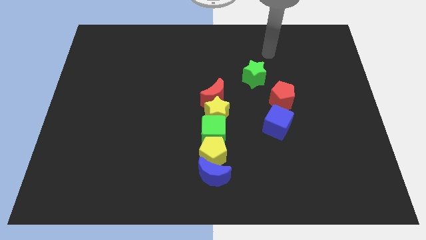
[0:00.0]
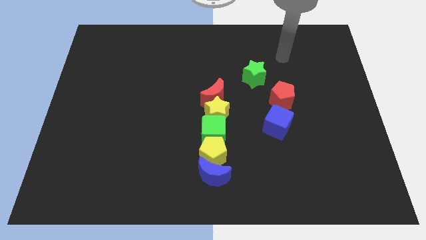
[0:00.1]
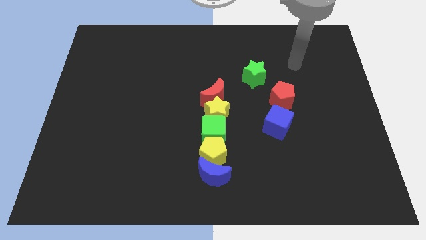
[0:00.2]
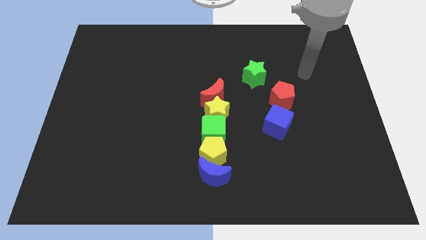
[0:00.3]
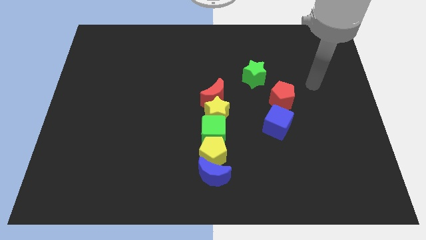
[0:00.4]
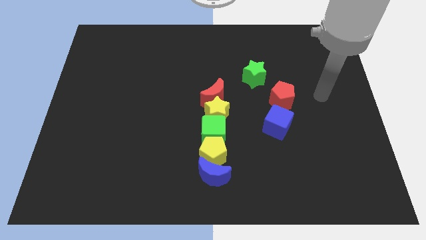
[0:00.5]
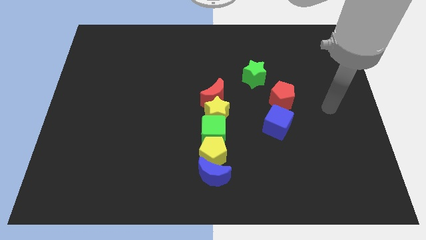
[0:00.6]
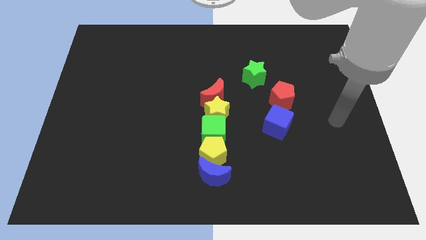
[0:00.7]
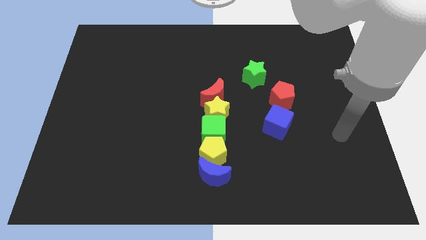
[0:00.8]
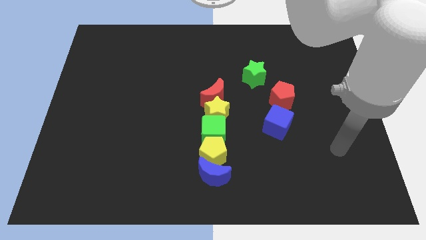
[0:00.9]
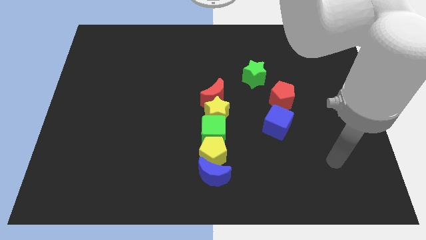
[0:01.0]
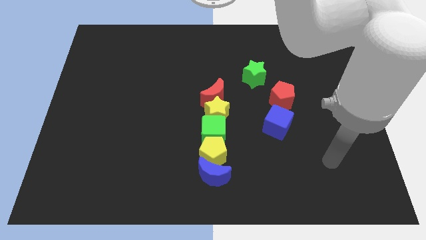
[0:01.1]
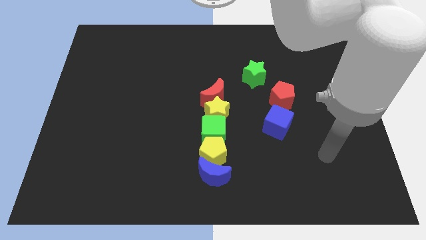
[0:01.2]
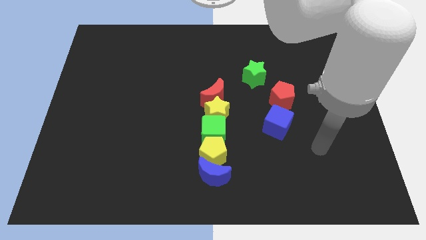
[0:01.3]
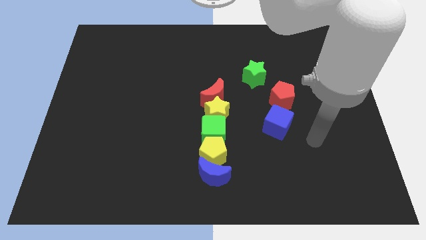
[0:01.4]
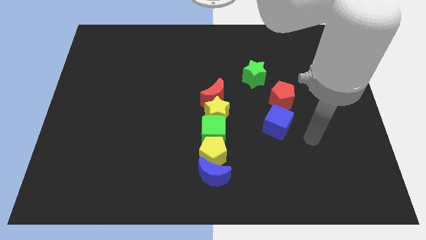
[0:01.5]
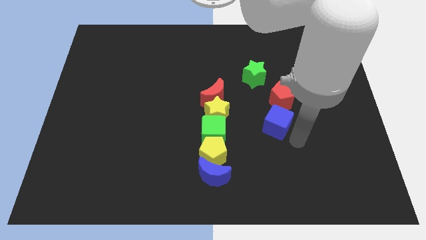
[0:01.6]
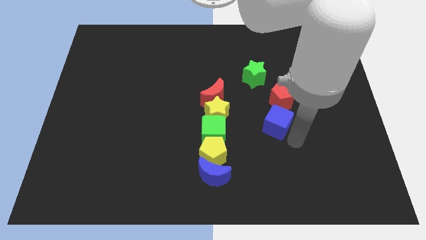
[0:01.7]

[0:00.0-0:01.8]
point your hand at the bottom right side of the blue cube

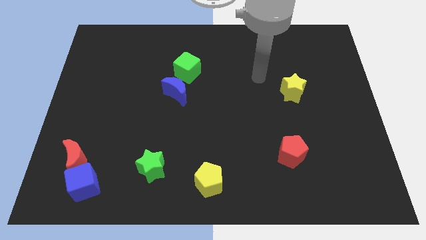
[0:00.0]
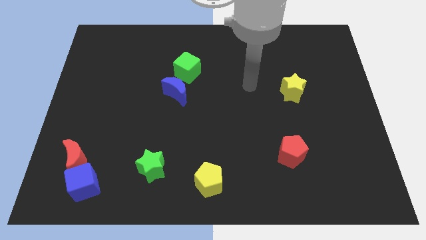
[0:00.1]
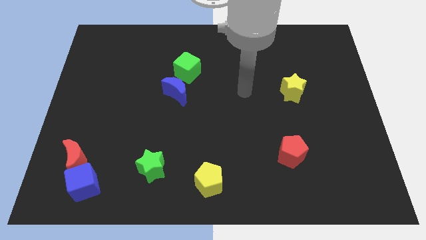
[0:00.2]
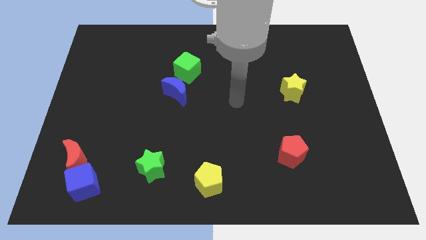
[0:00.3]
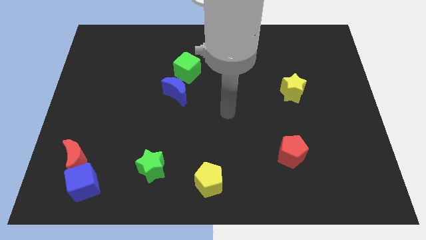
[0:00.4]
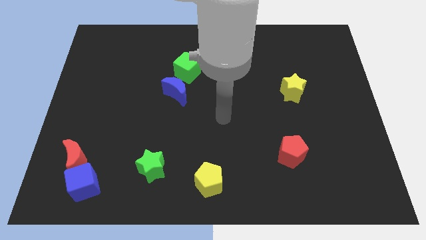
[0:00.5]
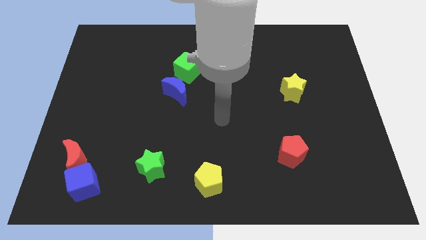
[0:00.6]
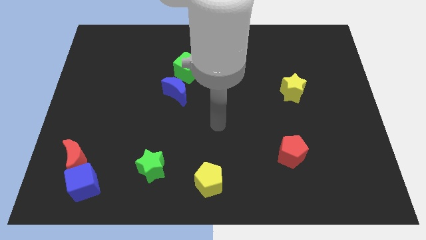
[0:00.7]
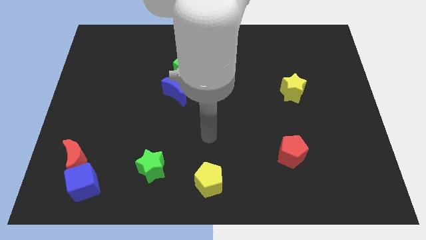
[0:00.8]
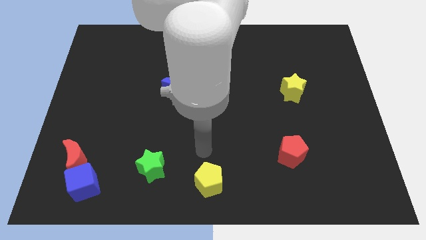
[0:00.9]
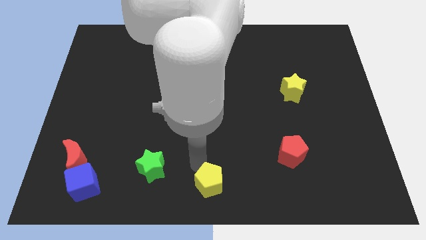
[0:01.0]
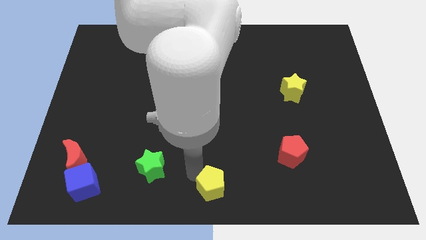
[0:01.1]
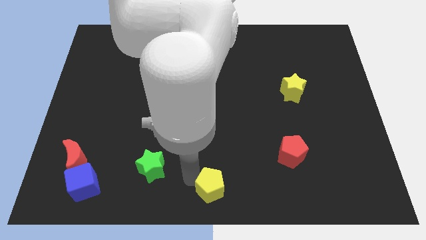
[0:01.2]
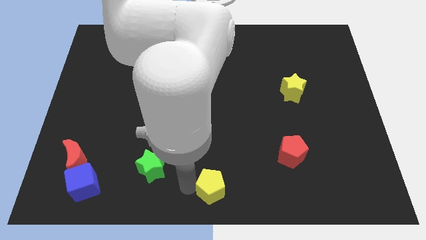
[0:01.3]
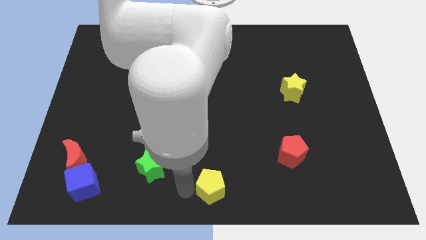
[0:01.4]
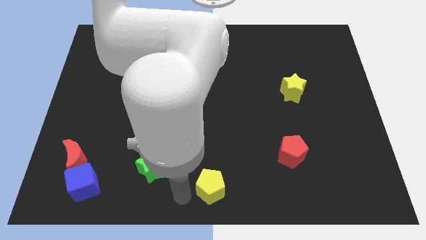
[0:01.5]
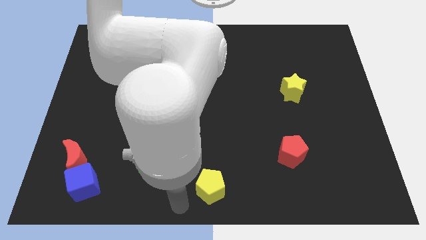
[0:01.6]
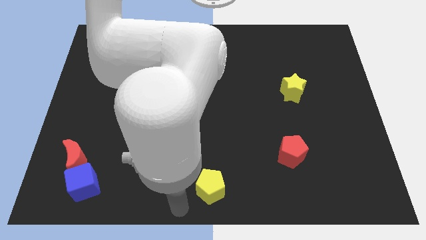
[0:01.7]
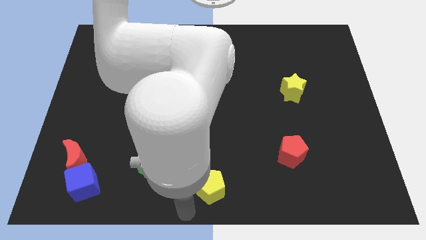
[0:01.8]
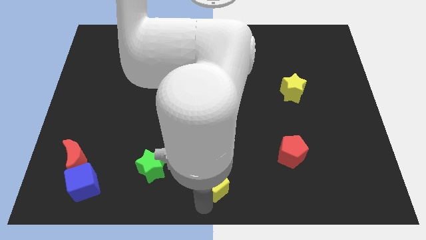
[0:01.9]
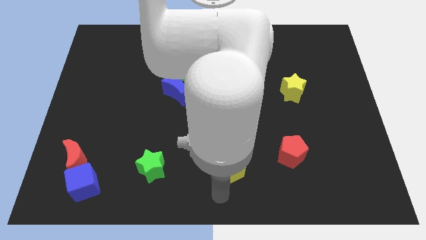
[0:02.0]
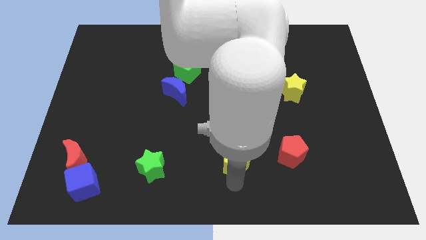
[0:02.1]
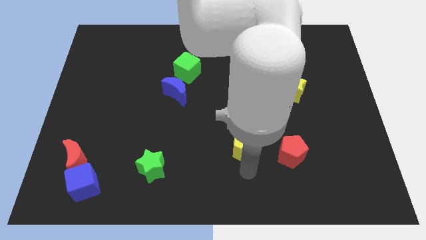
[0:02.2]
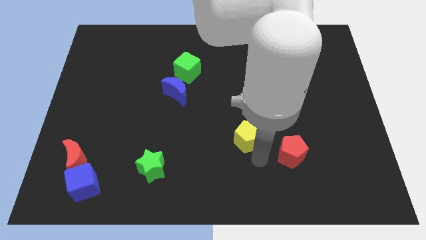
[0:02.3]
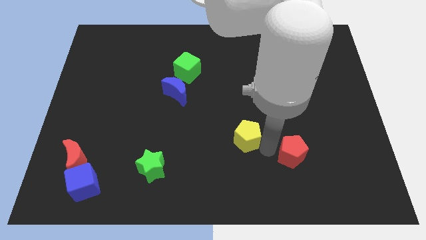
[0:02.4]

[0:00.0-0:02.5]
move the yellow pentagon towards the top left of the red pentagon

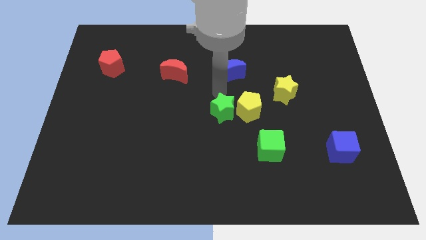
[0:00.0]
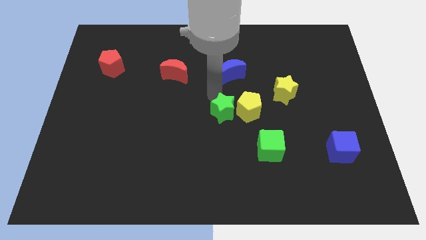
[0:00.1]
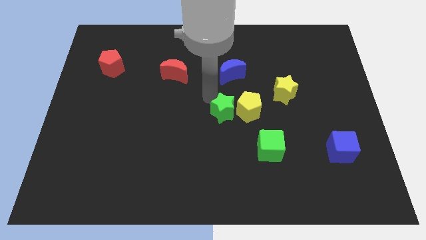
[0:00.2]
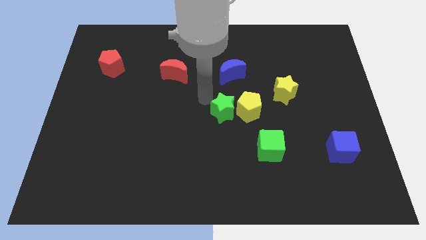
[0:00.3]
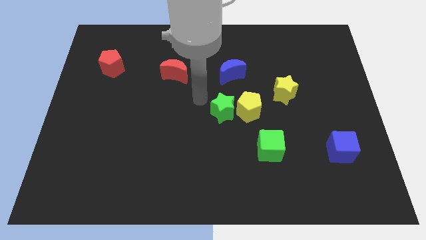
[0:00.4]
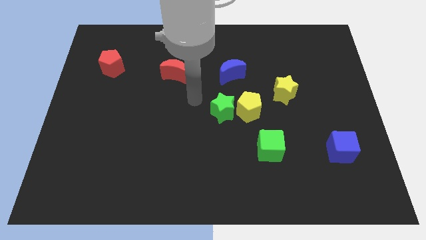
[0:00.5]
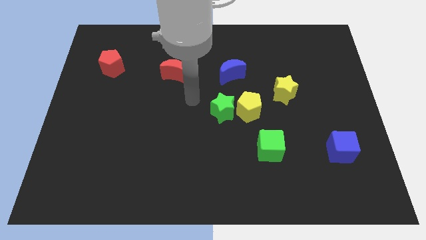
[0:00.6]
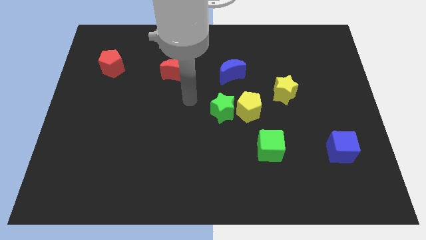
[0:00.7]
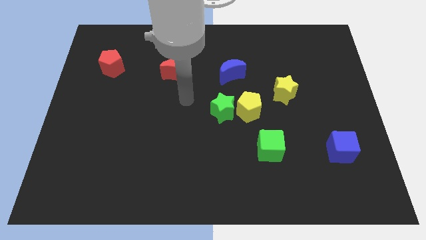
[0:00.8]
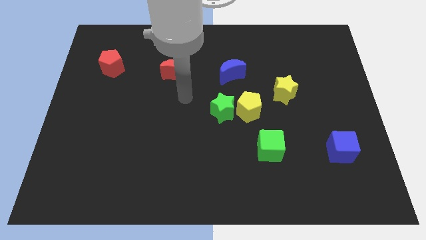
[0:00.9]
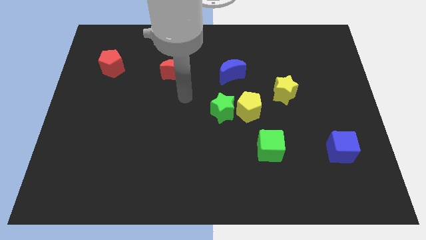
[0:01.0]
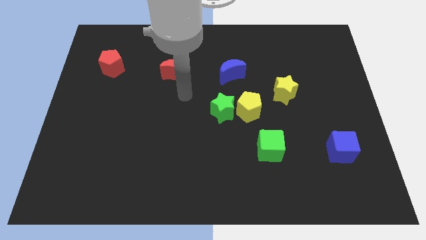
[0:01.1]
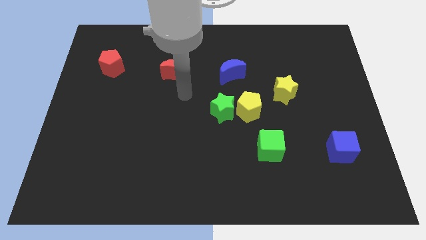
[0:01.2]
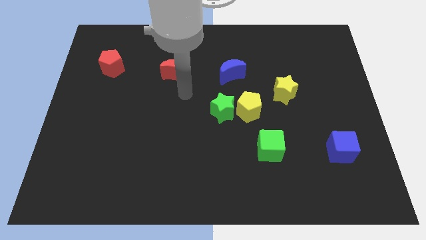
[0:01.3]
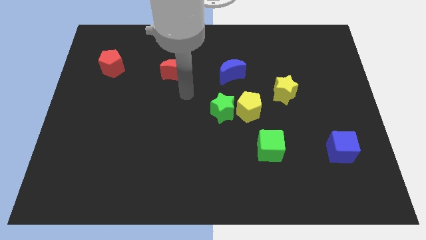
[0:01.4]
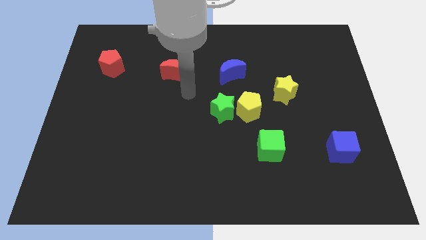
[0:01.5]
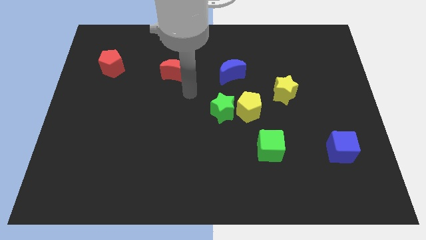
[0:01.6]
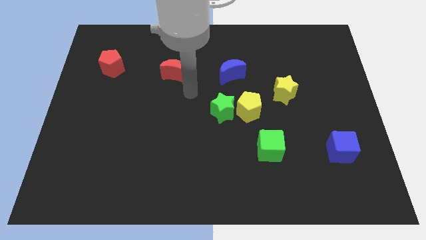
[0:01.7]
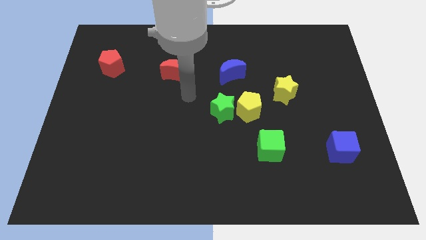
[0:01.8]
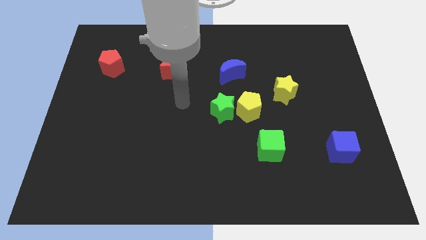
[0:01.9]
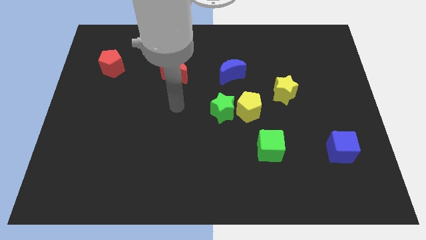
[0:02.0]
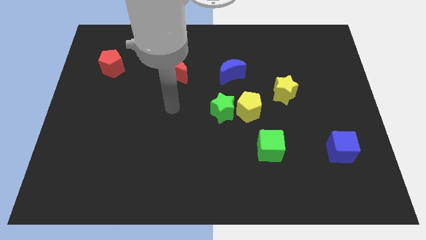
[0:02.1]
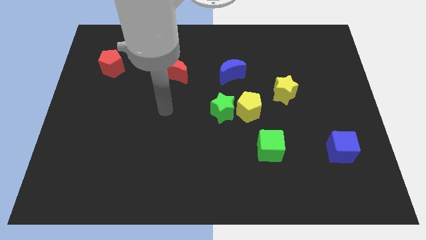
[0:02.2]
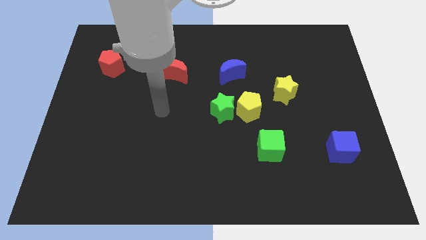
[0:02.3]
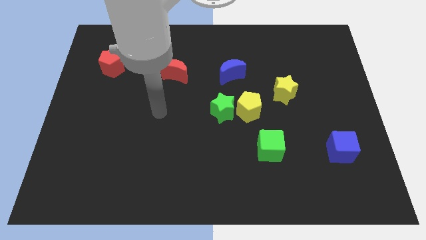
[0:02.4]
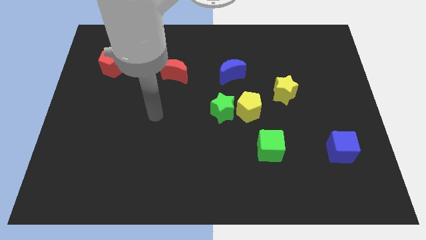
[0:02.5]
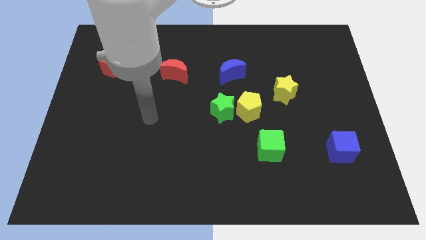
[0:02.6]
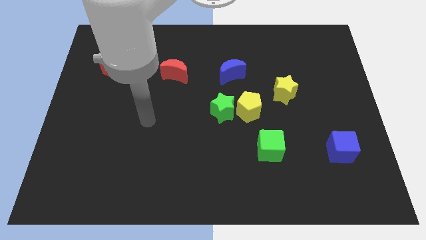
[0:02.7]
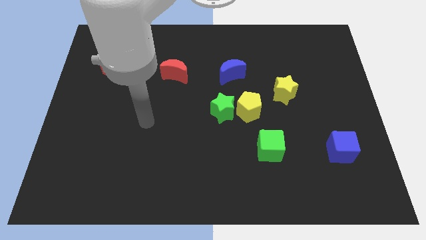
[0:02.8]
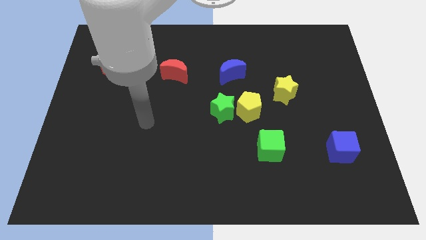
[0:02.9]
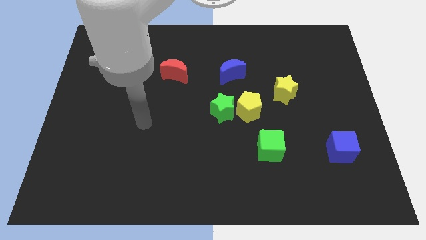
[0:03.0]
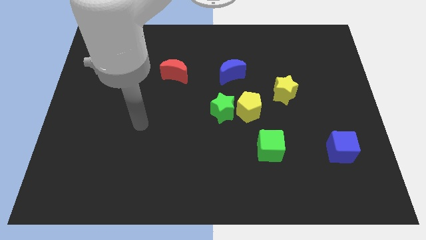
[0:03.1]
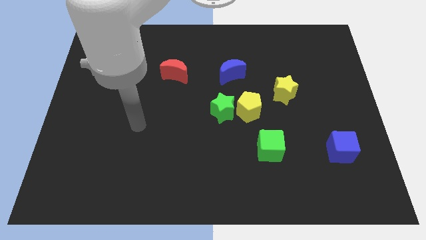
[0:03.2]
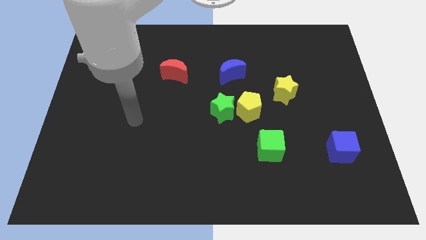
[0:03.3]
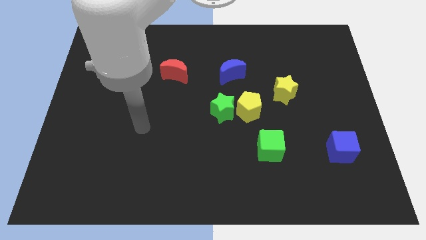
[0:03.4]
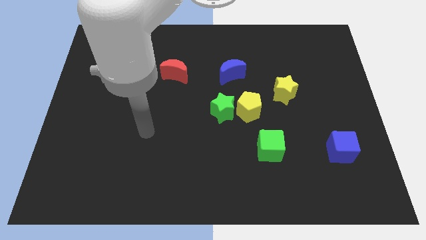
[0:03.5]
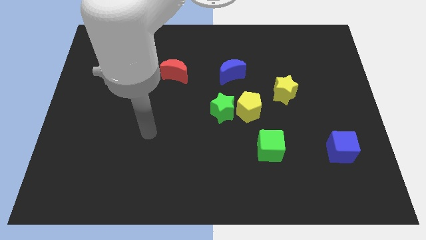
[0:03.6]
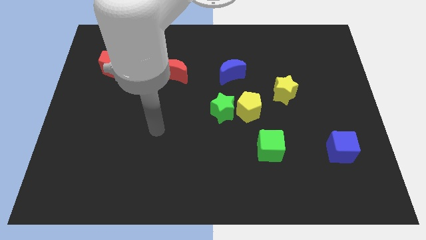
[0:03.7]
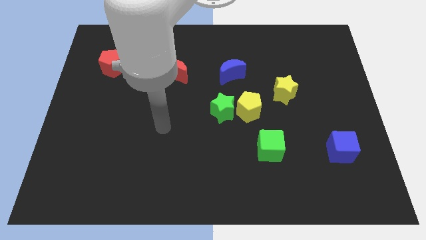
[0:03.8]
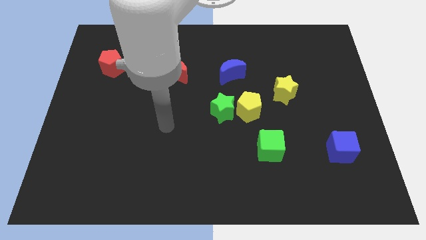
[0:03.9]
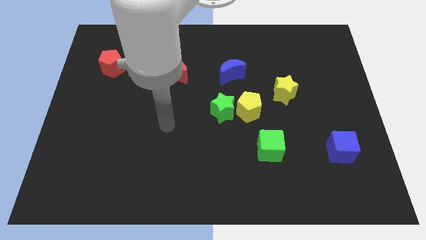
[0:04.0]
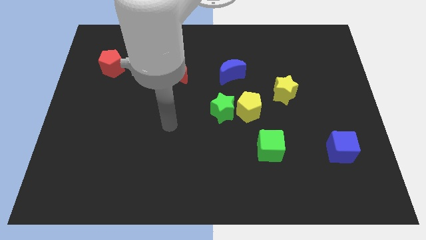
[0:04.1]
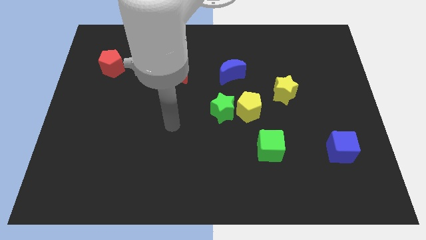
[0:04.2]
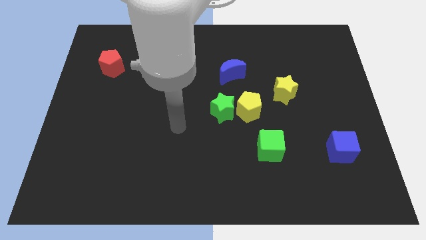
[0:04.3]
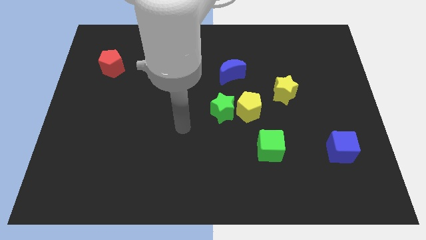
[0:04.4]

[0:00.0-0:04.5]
move your hand away from the green star
